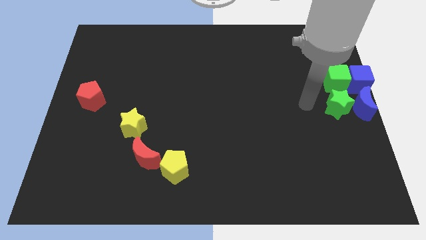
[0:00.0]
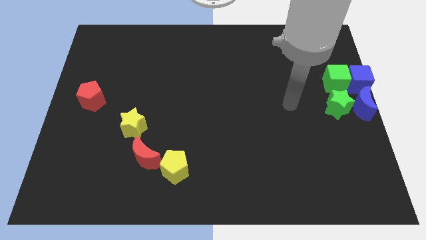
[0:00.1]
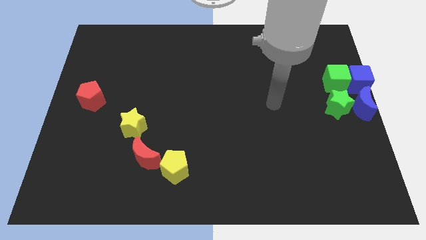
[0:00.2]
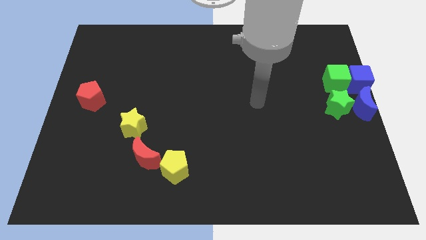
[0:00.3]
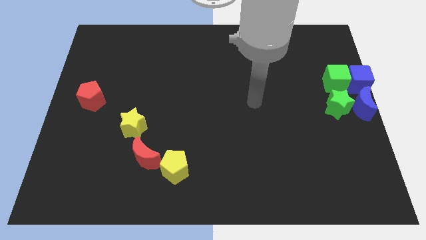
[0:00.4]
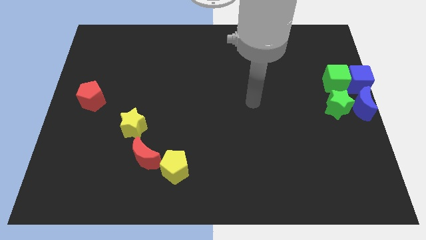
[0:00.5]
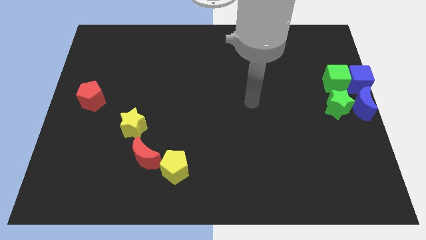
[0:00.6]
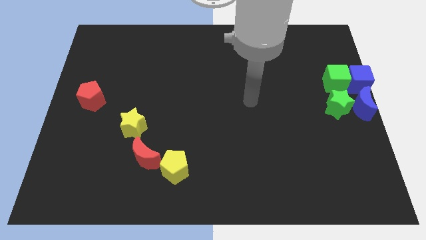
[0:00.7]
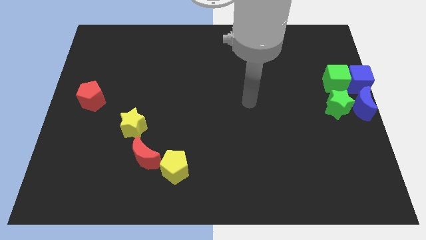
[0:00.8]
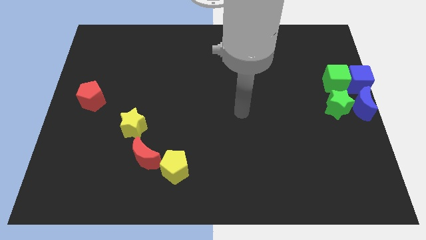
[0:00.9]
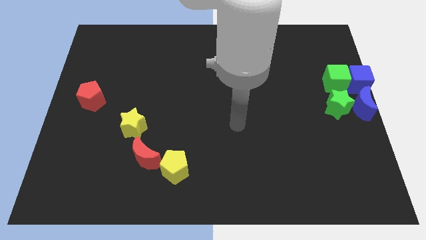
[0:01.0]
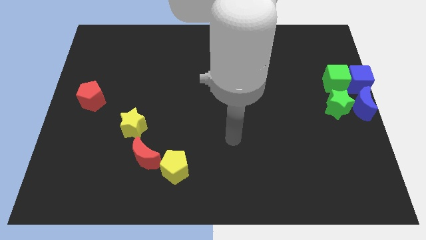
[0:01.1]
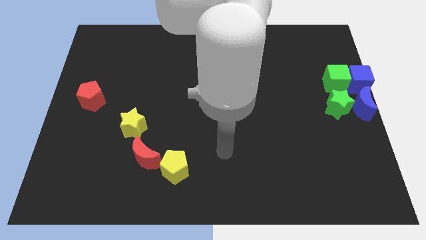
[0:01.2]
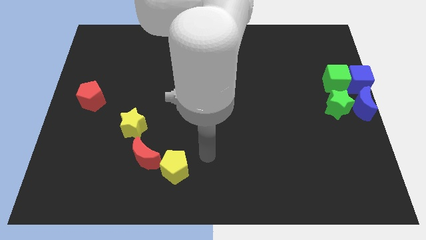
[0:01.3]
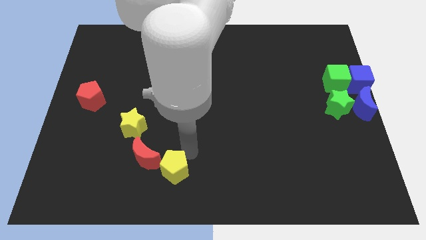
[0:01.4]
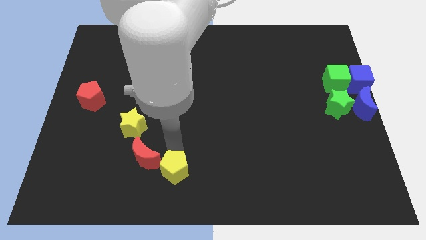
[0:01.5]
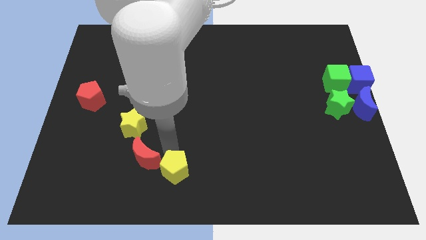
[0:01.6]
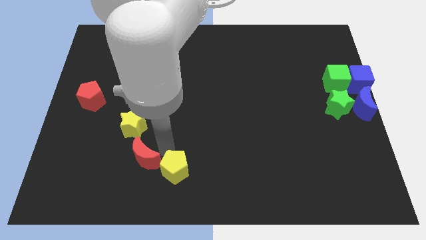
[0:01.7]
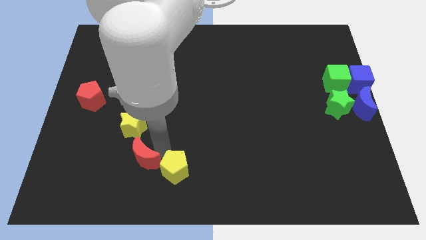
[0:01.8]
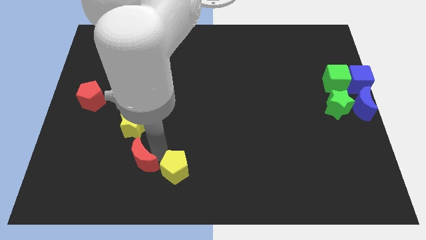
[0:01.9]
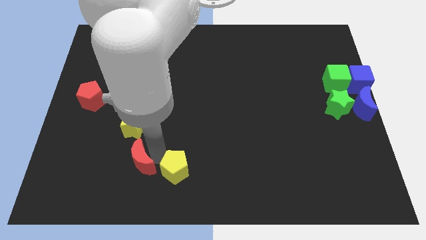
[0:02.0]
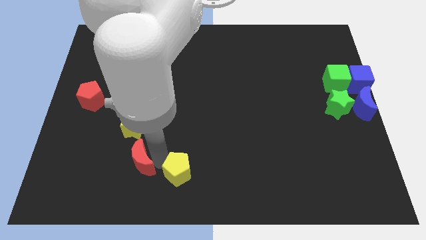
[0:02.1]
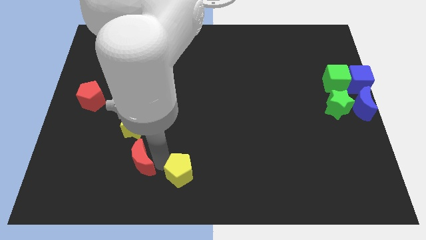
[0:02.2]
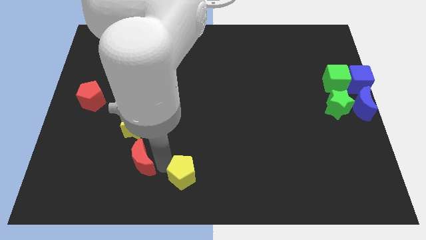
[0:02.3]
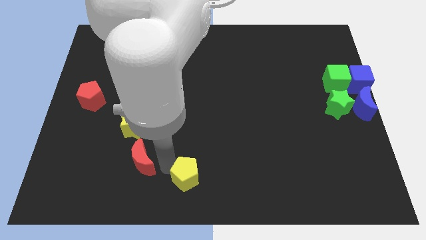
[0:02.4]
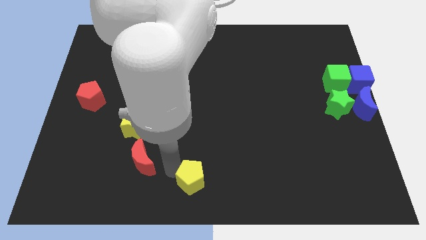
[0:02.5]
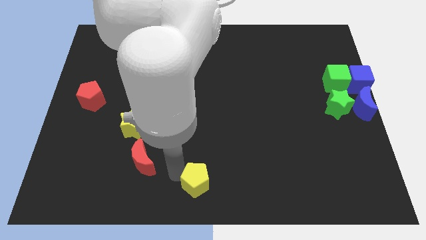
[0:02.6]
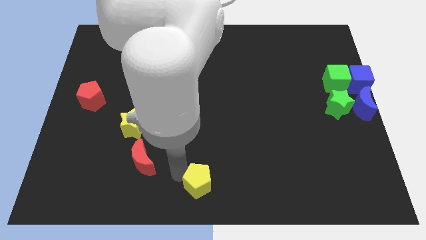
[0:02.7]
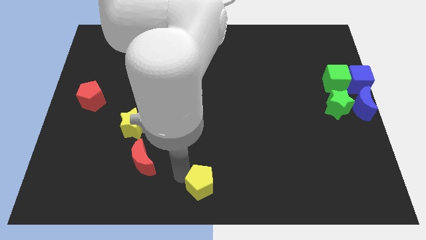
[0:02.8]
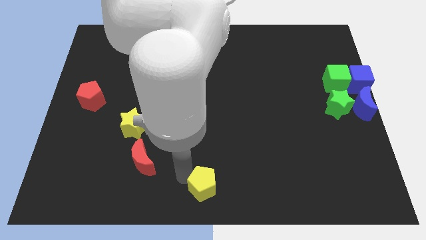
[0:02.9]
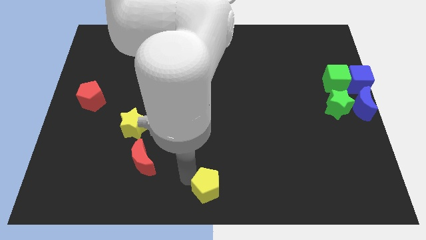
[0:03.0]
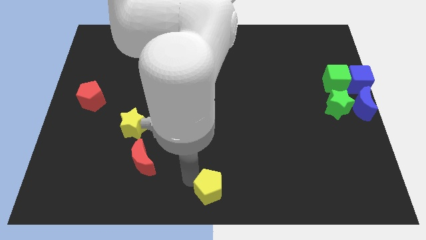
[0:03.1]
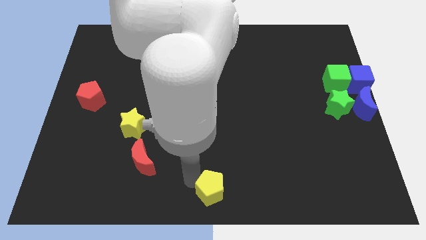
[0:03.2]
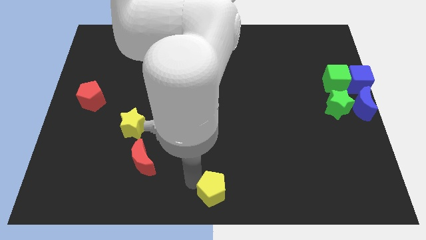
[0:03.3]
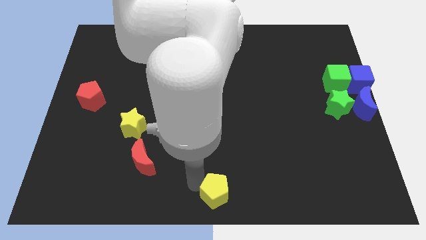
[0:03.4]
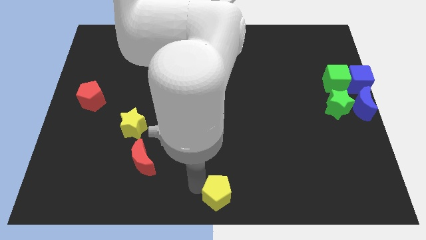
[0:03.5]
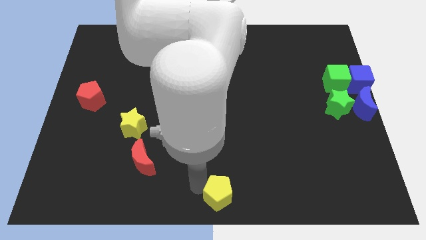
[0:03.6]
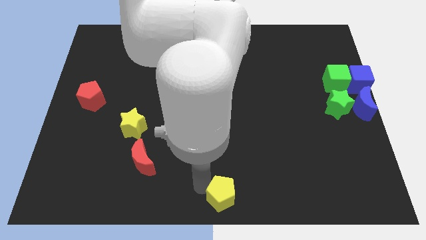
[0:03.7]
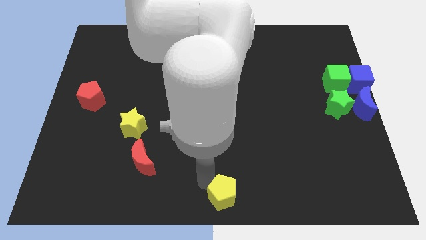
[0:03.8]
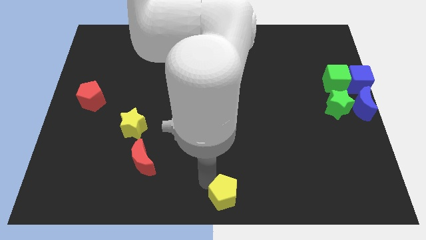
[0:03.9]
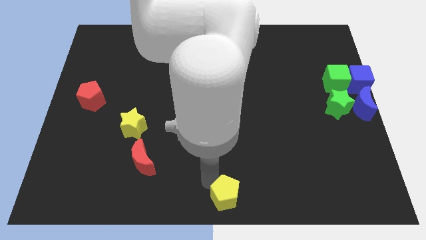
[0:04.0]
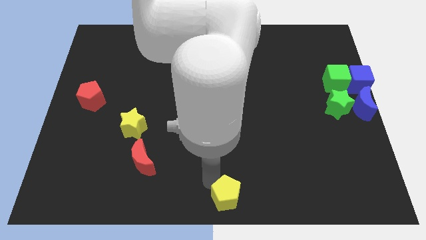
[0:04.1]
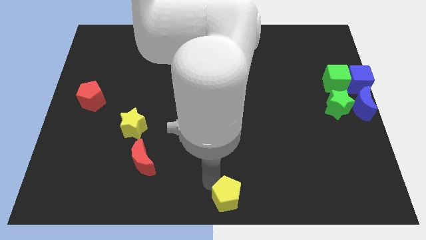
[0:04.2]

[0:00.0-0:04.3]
put the yellow pentagon at the bottom center of the board

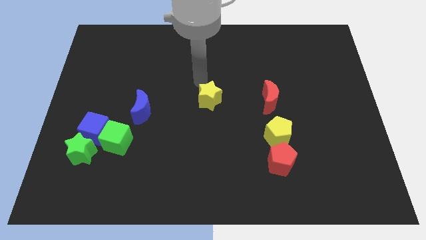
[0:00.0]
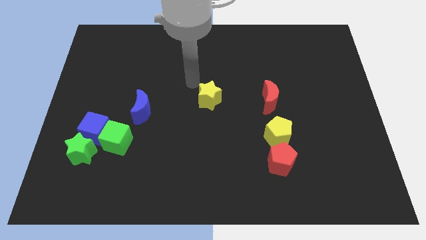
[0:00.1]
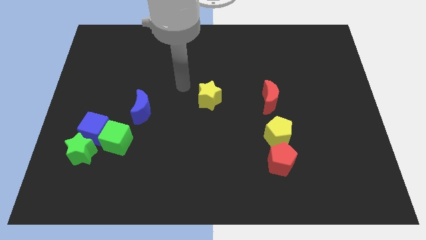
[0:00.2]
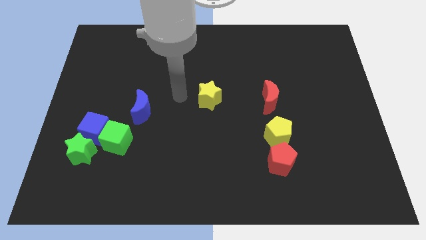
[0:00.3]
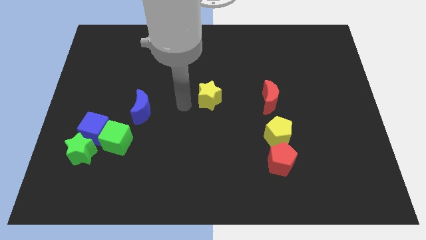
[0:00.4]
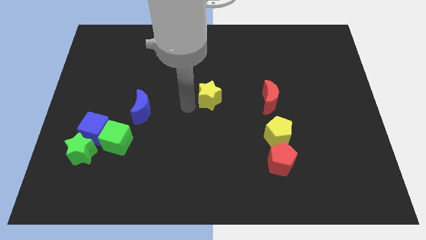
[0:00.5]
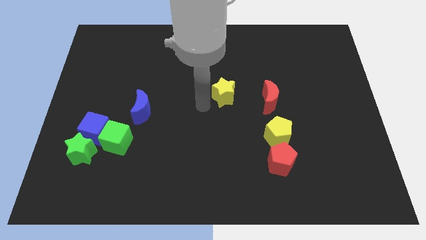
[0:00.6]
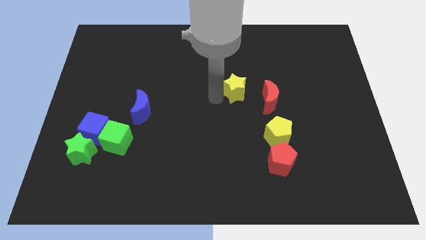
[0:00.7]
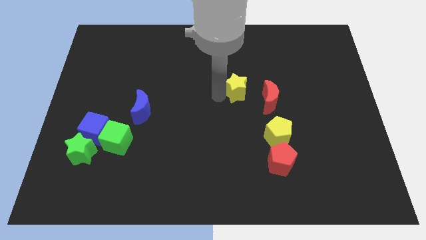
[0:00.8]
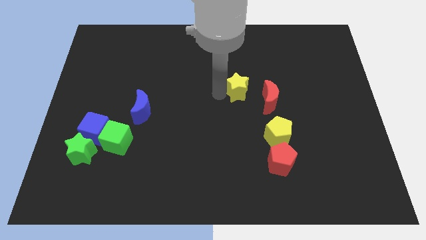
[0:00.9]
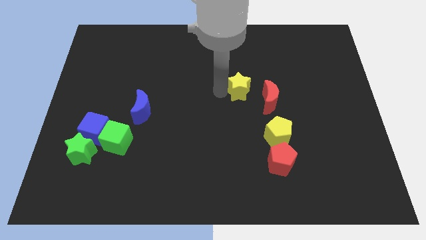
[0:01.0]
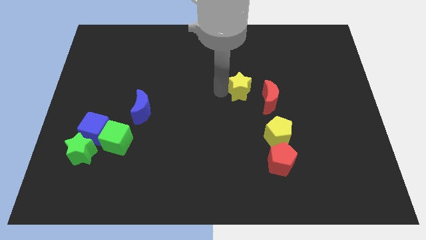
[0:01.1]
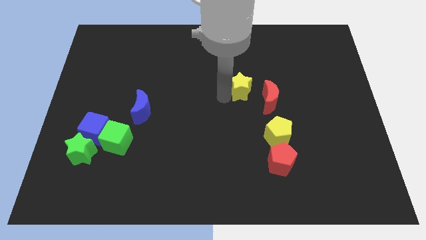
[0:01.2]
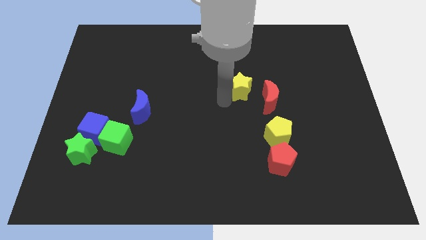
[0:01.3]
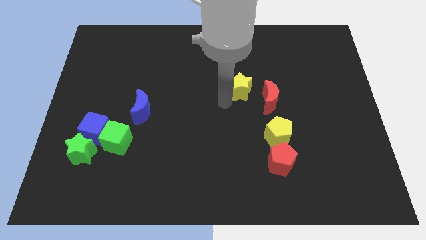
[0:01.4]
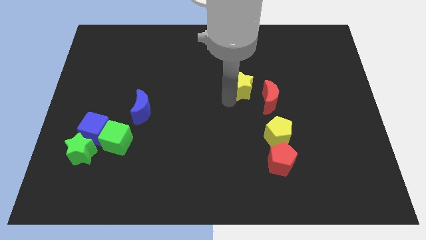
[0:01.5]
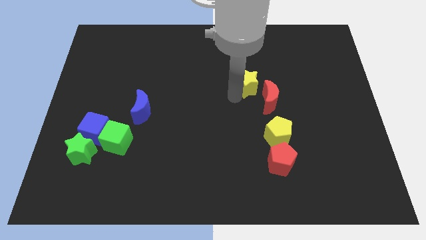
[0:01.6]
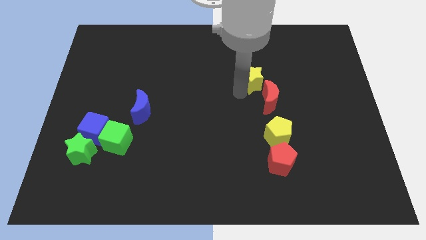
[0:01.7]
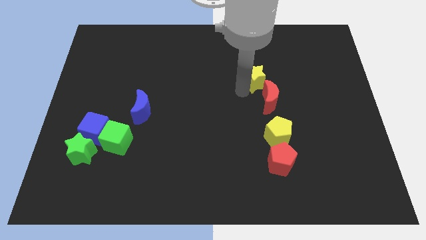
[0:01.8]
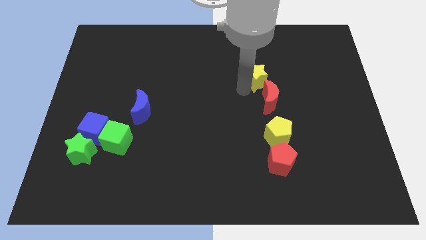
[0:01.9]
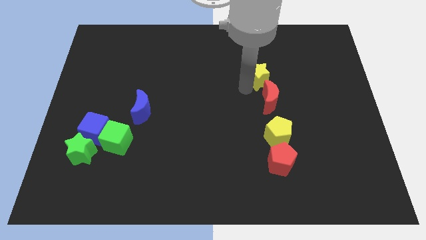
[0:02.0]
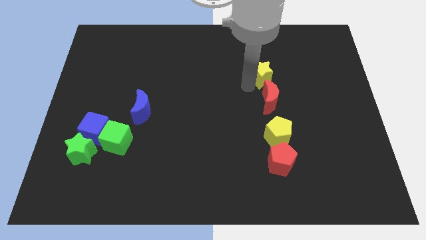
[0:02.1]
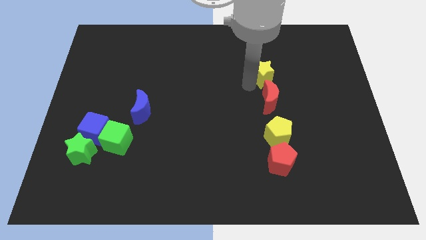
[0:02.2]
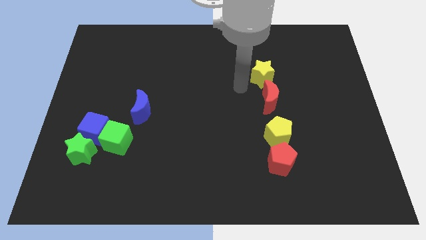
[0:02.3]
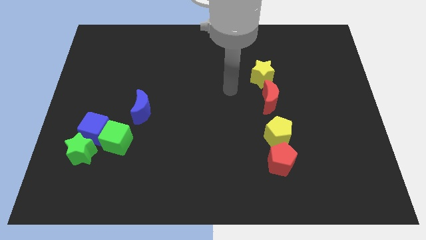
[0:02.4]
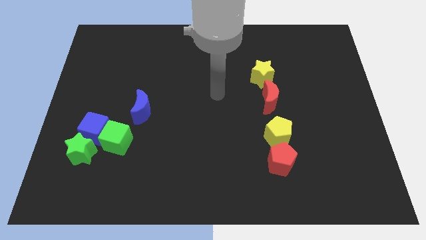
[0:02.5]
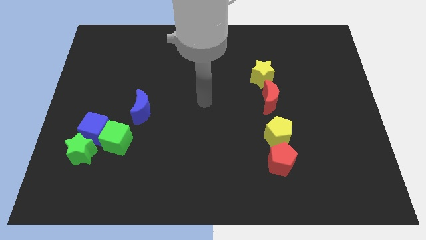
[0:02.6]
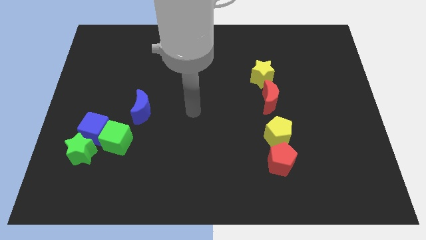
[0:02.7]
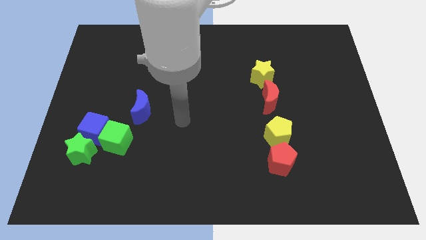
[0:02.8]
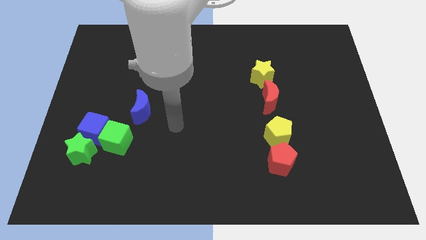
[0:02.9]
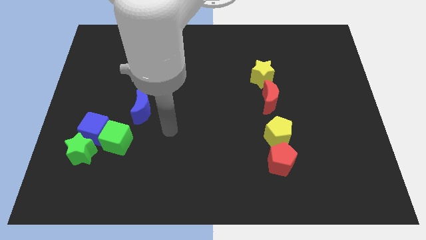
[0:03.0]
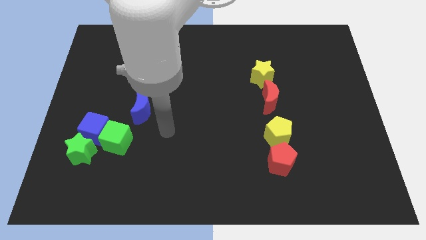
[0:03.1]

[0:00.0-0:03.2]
move the yellow star to the top side of the red moon

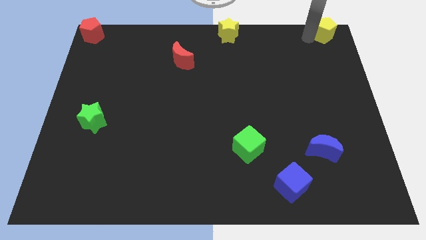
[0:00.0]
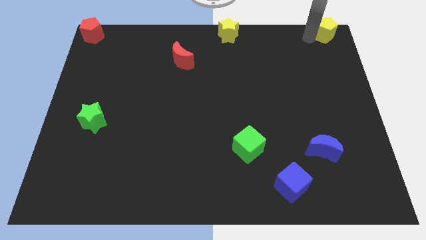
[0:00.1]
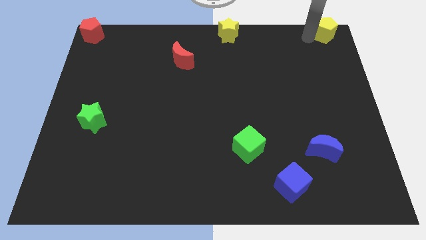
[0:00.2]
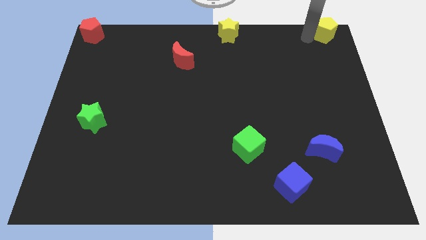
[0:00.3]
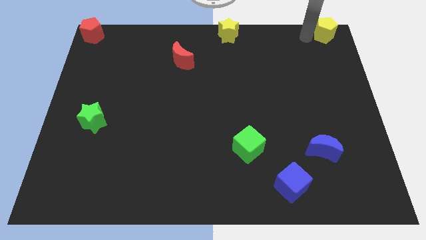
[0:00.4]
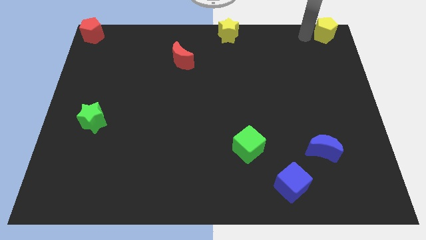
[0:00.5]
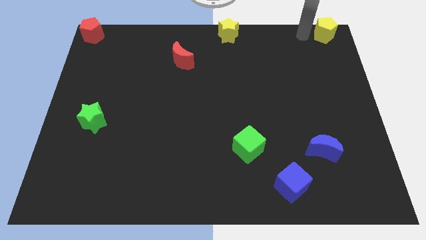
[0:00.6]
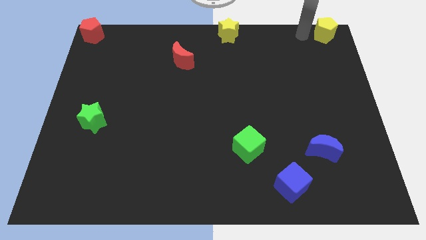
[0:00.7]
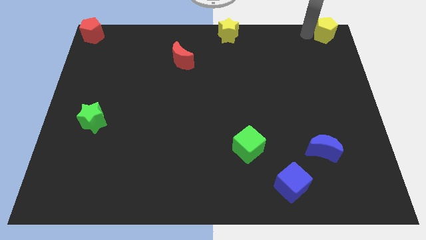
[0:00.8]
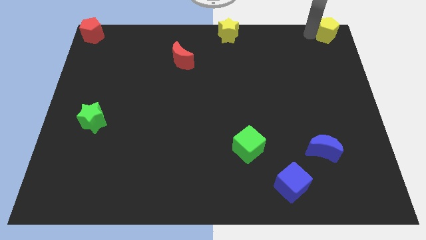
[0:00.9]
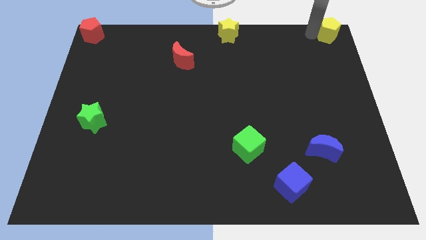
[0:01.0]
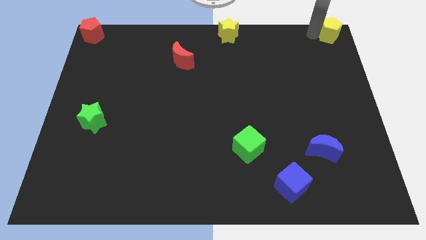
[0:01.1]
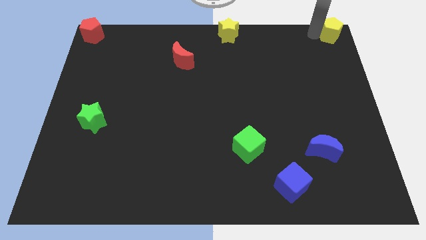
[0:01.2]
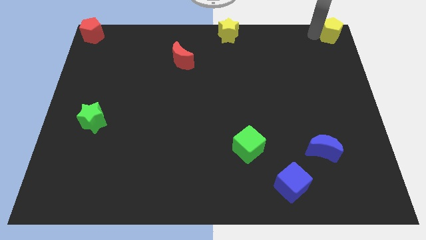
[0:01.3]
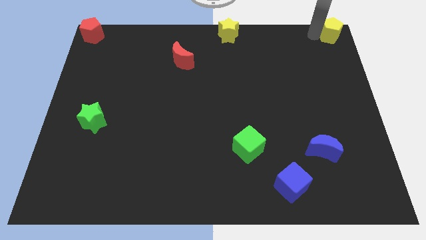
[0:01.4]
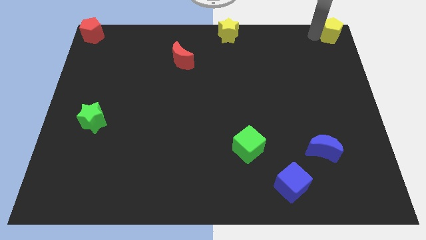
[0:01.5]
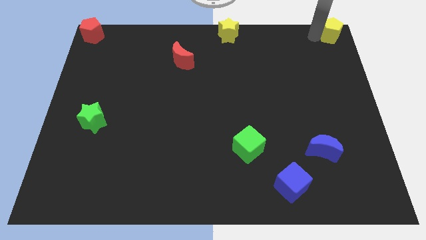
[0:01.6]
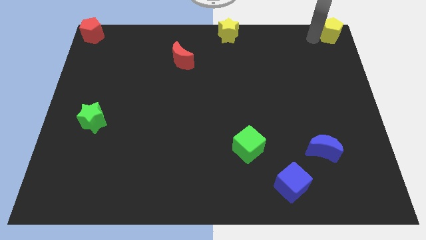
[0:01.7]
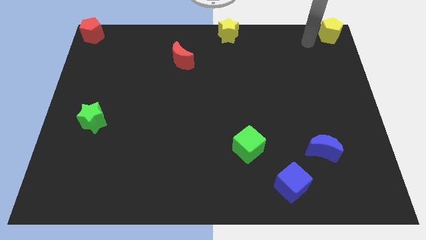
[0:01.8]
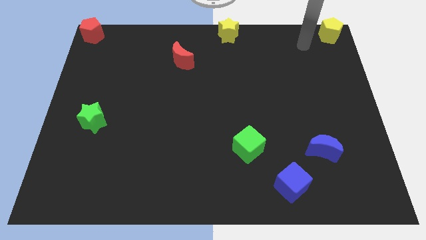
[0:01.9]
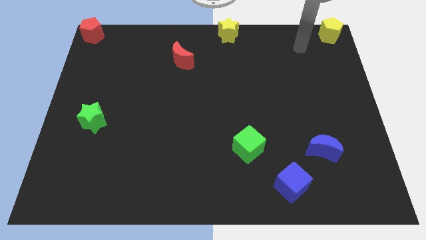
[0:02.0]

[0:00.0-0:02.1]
push the yellow pentagon to the top right corner of the board
